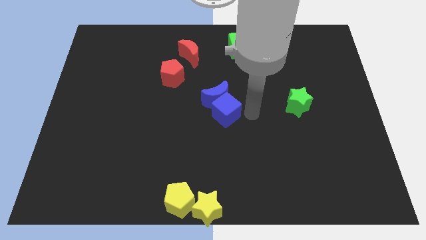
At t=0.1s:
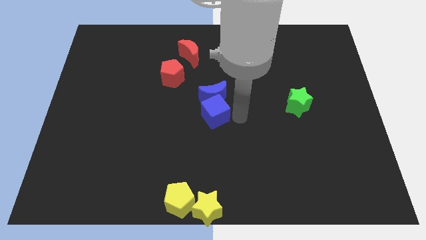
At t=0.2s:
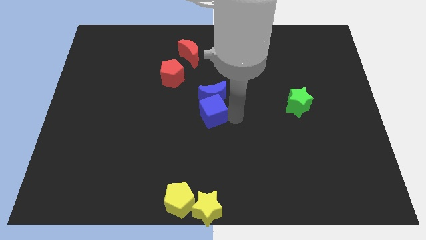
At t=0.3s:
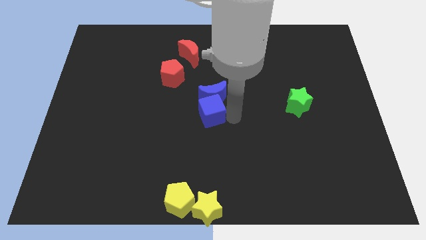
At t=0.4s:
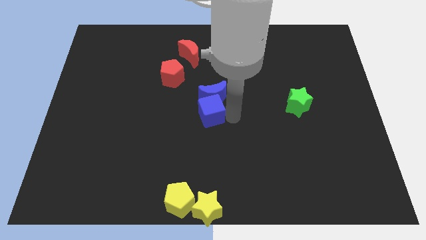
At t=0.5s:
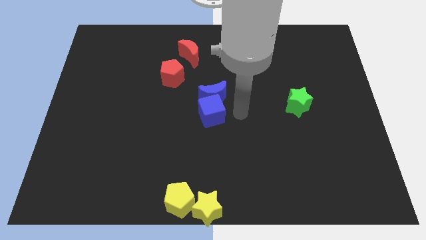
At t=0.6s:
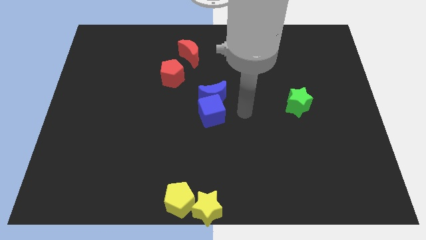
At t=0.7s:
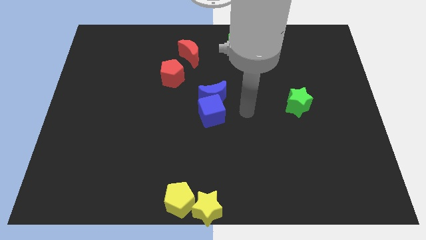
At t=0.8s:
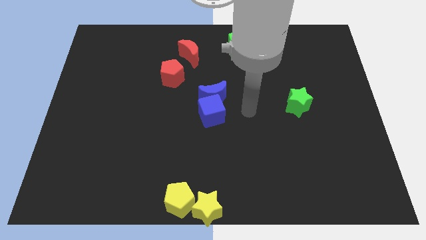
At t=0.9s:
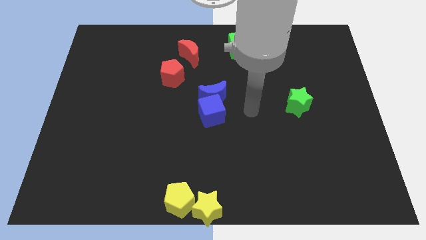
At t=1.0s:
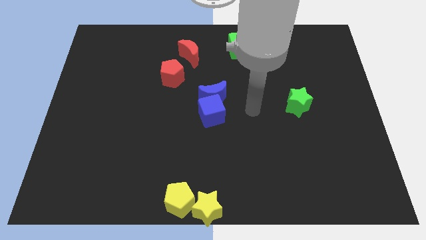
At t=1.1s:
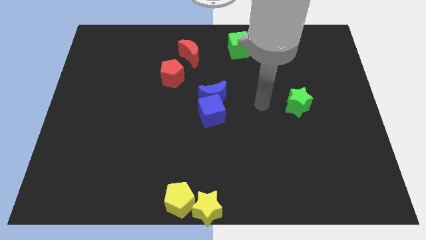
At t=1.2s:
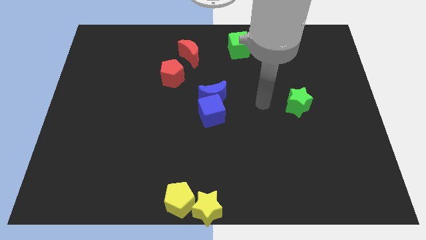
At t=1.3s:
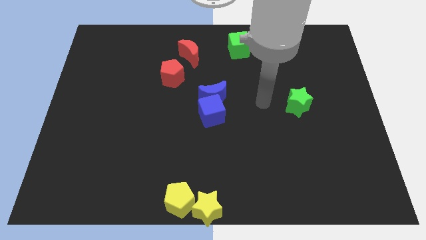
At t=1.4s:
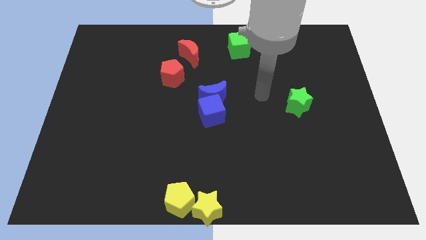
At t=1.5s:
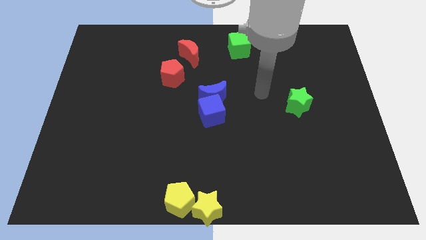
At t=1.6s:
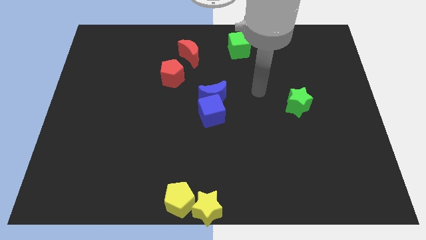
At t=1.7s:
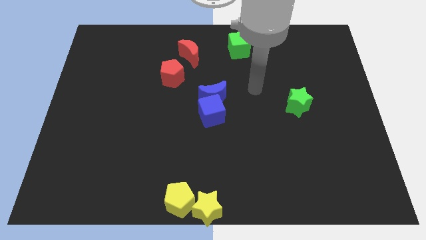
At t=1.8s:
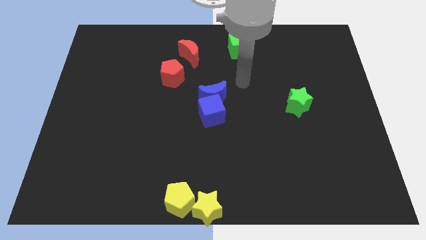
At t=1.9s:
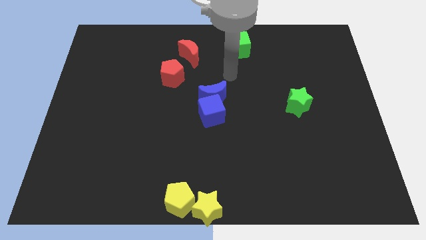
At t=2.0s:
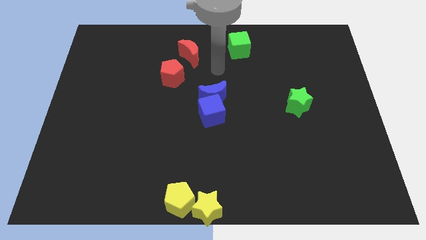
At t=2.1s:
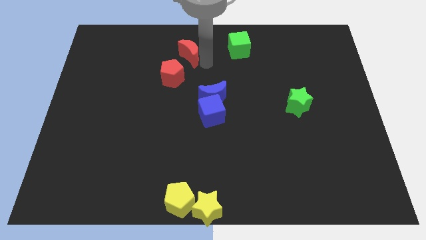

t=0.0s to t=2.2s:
move the arm close to the red moon

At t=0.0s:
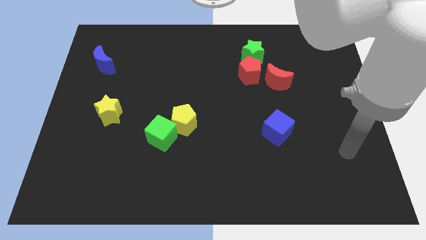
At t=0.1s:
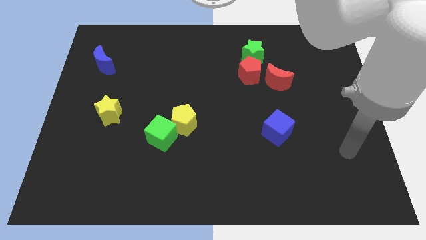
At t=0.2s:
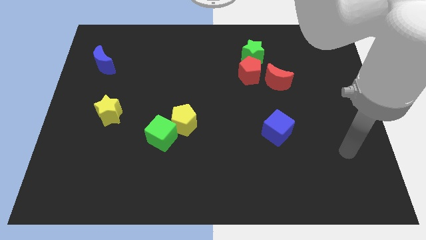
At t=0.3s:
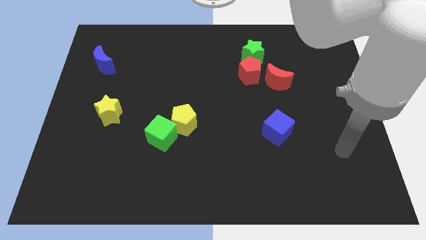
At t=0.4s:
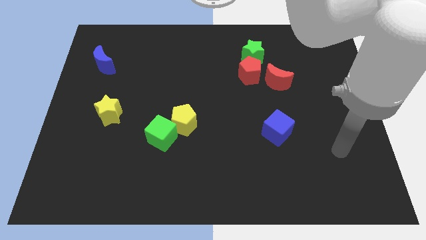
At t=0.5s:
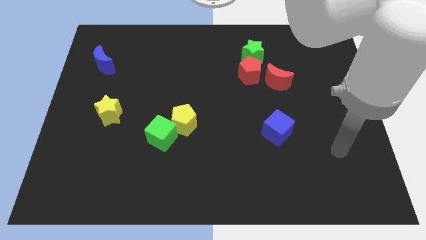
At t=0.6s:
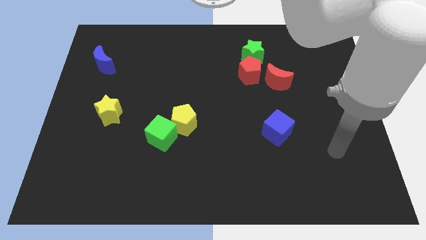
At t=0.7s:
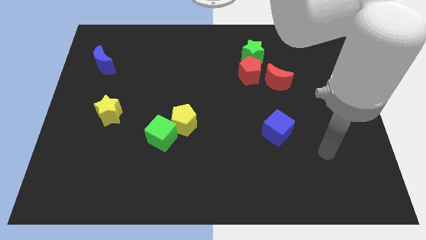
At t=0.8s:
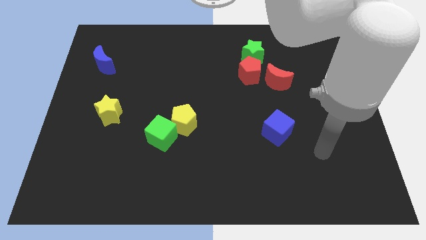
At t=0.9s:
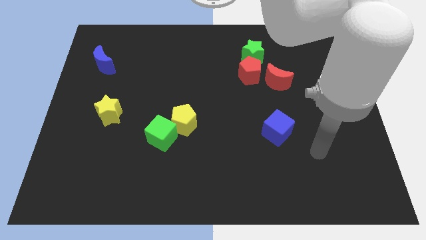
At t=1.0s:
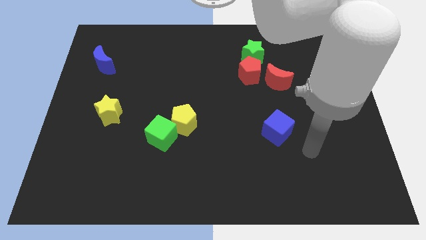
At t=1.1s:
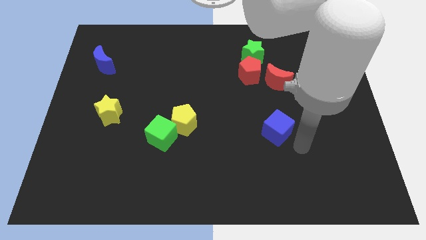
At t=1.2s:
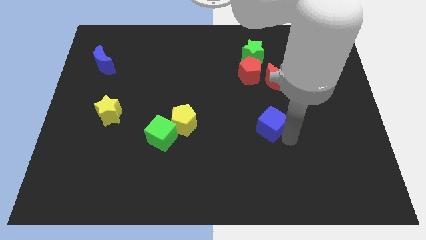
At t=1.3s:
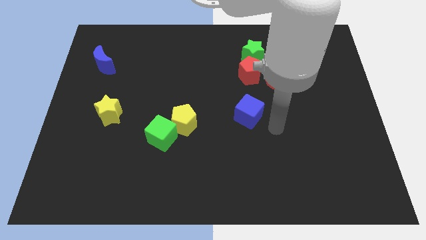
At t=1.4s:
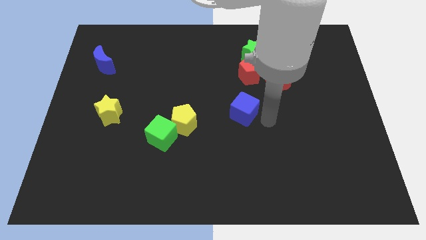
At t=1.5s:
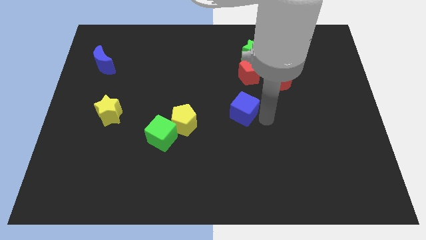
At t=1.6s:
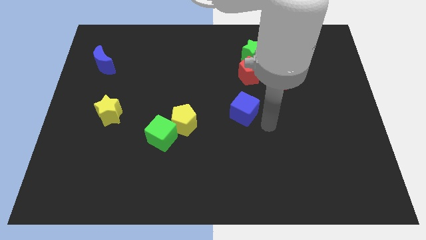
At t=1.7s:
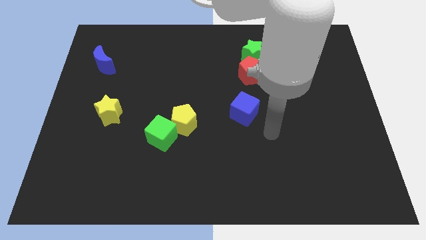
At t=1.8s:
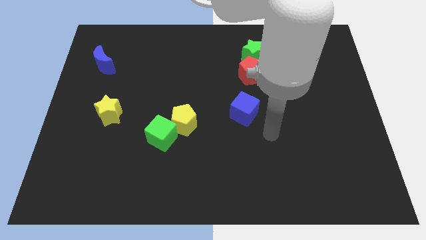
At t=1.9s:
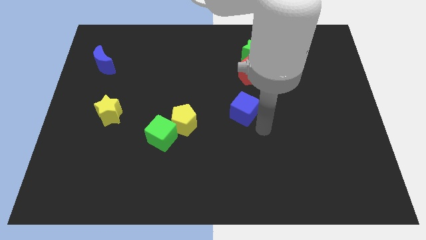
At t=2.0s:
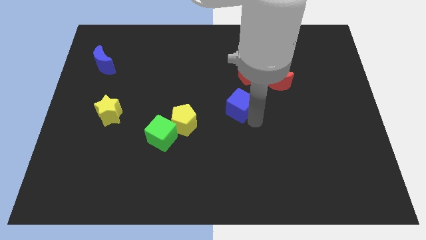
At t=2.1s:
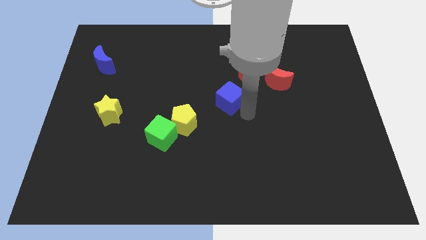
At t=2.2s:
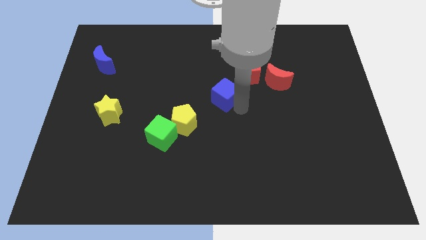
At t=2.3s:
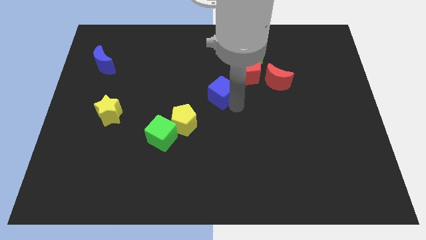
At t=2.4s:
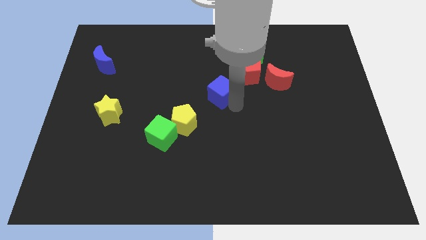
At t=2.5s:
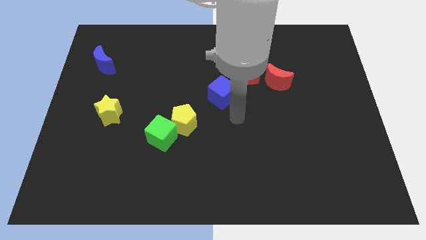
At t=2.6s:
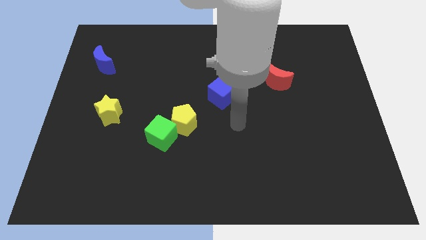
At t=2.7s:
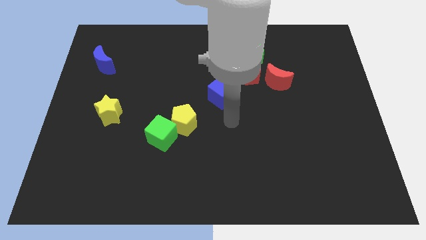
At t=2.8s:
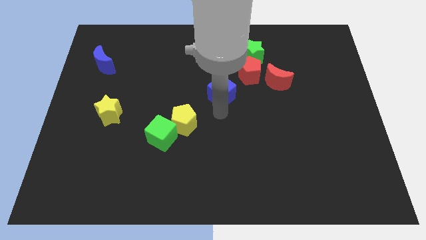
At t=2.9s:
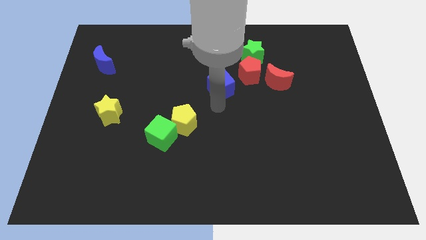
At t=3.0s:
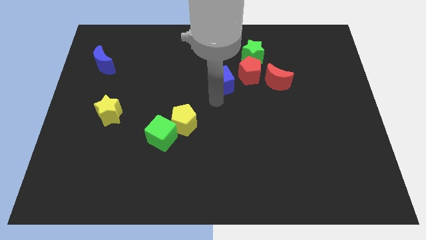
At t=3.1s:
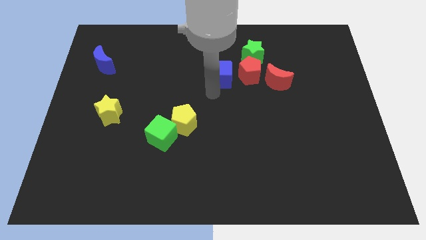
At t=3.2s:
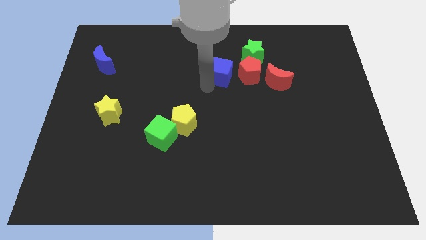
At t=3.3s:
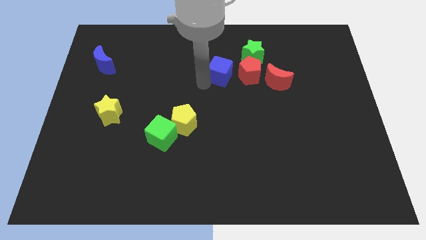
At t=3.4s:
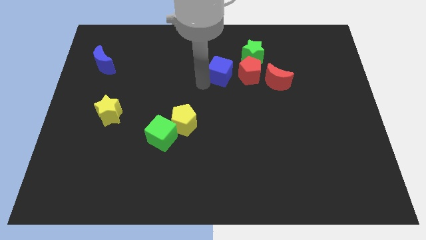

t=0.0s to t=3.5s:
move the blue cube to the left of the red pentagon

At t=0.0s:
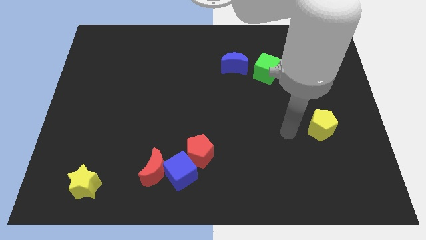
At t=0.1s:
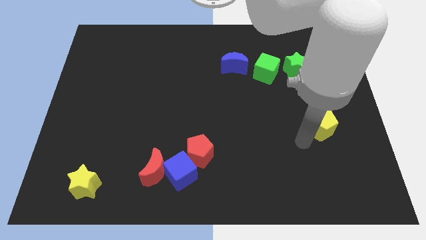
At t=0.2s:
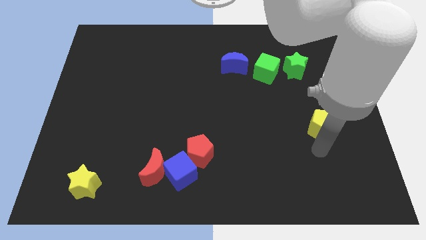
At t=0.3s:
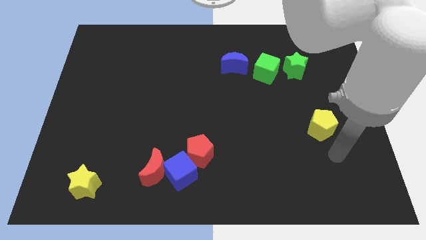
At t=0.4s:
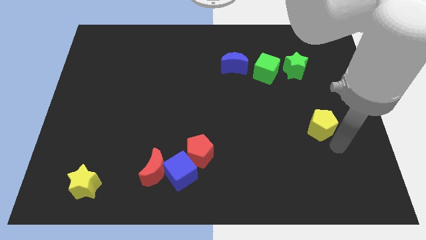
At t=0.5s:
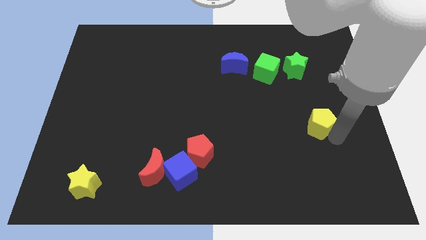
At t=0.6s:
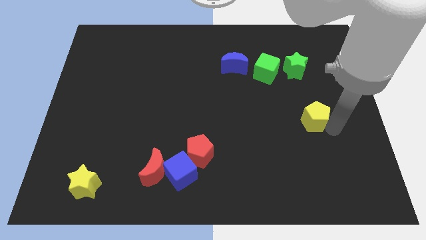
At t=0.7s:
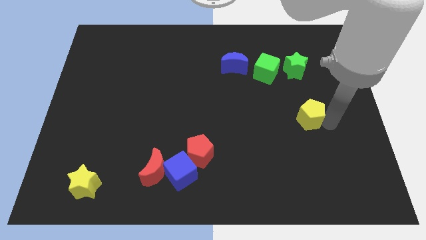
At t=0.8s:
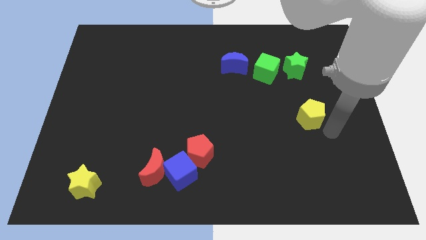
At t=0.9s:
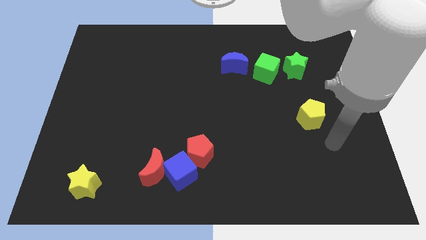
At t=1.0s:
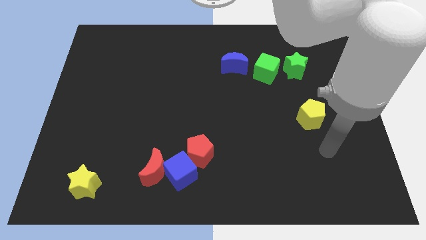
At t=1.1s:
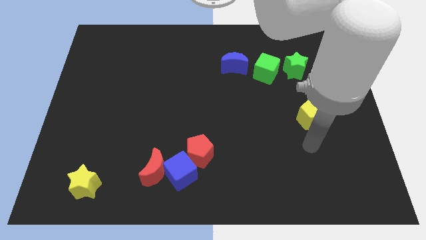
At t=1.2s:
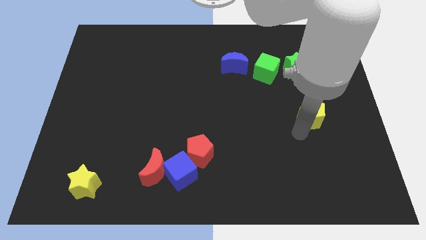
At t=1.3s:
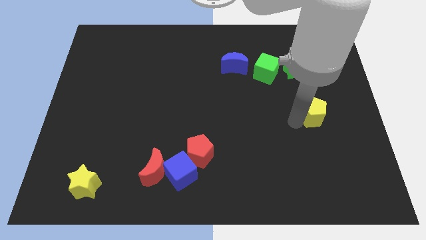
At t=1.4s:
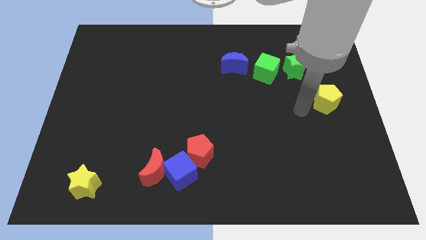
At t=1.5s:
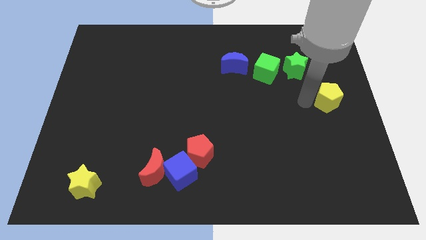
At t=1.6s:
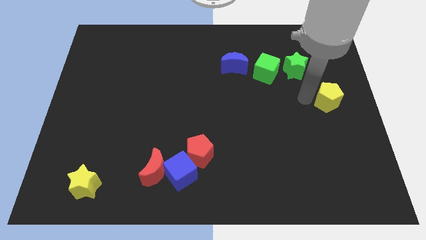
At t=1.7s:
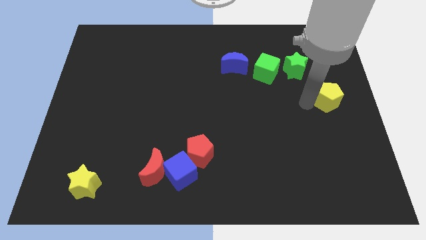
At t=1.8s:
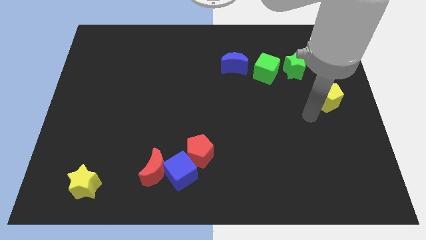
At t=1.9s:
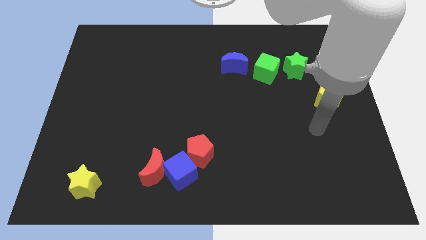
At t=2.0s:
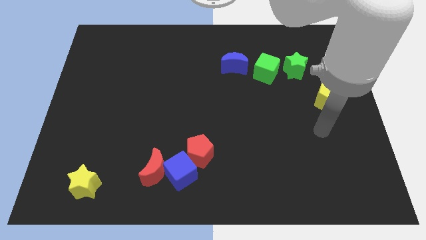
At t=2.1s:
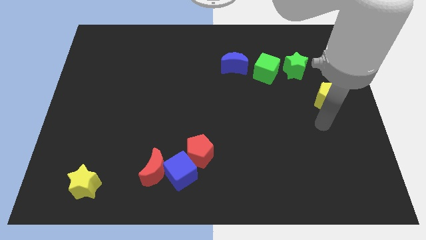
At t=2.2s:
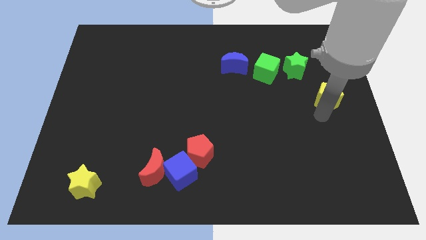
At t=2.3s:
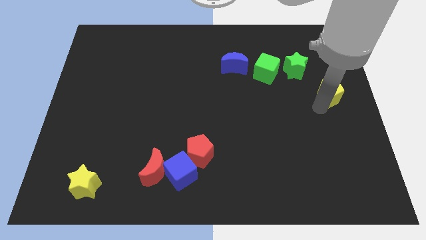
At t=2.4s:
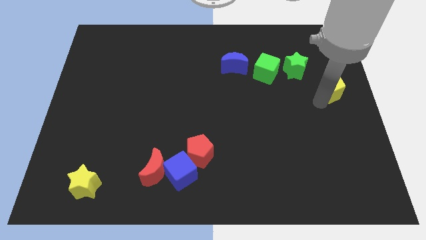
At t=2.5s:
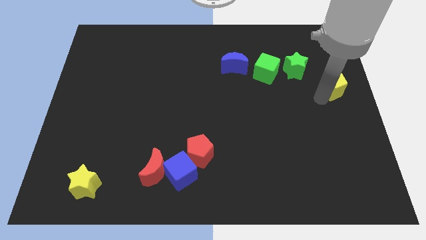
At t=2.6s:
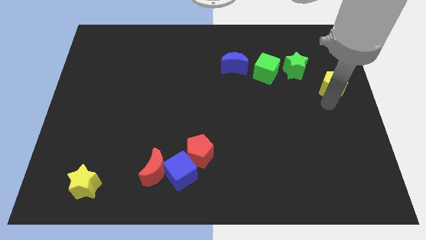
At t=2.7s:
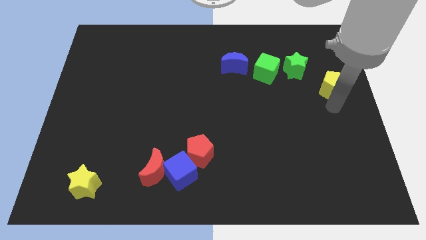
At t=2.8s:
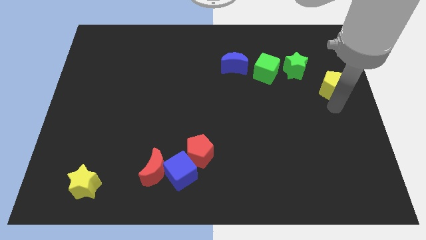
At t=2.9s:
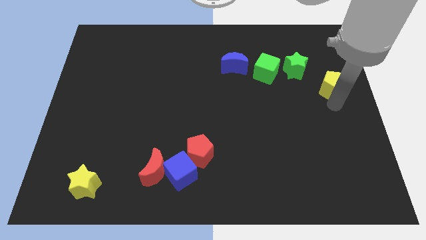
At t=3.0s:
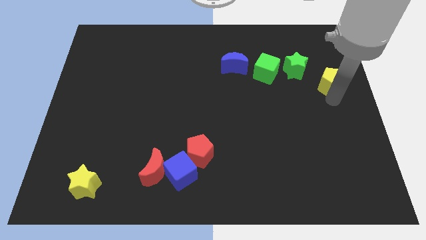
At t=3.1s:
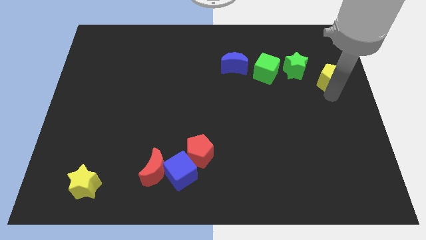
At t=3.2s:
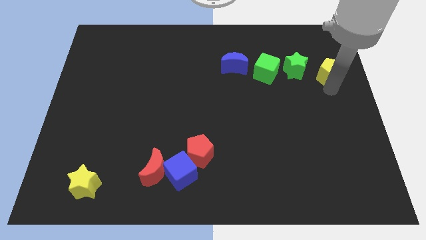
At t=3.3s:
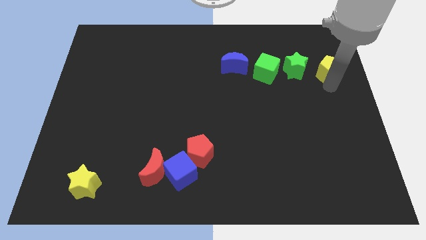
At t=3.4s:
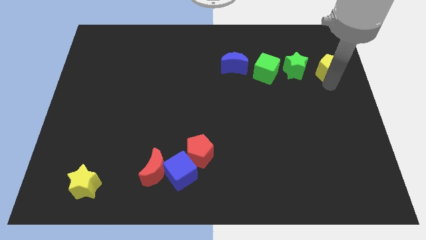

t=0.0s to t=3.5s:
place the yellow pentagon right to the green star
